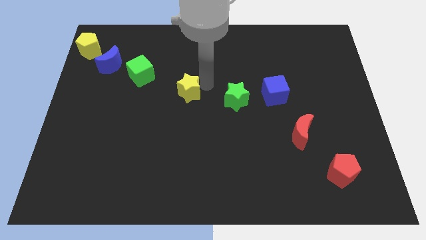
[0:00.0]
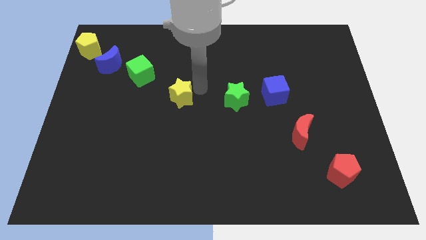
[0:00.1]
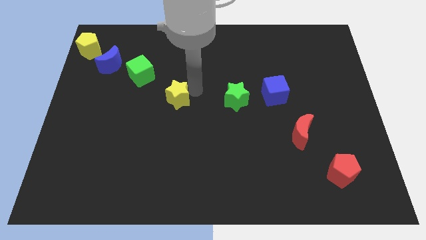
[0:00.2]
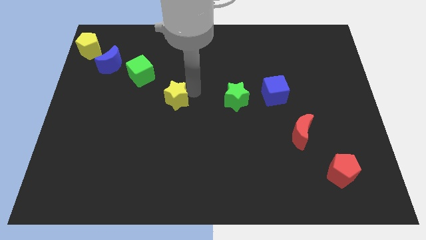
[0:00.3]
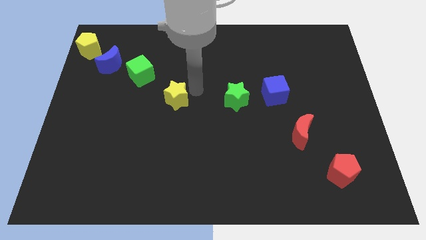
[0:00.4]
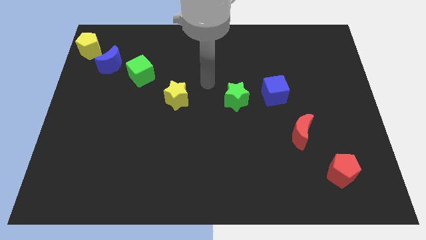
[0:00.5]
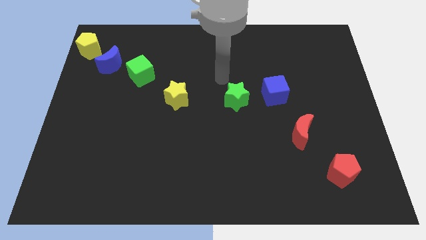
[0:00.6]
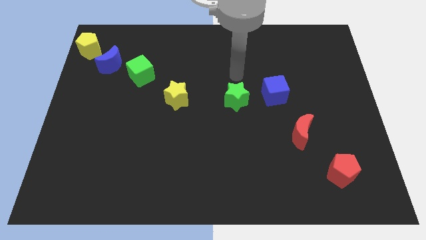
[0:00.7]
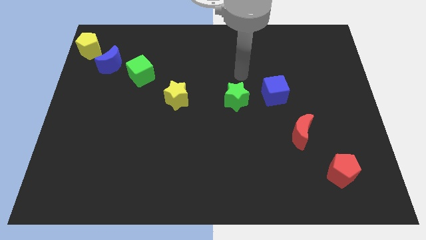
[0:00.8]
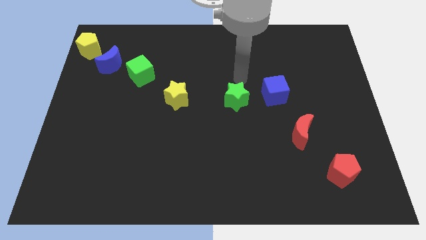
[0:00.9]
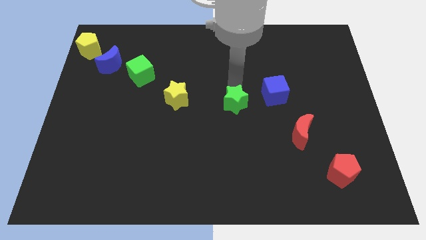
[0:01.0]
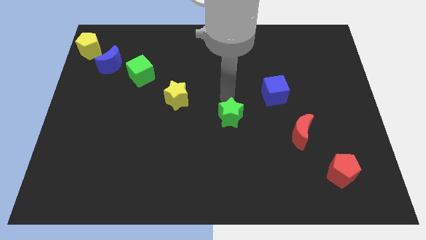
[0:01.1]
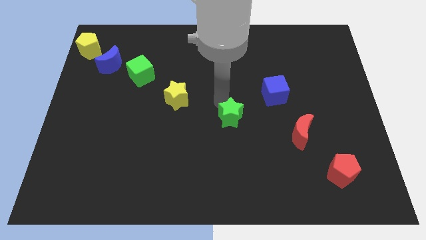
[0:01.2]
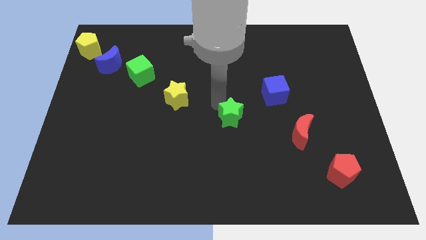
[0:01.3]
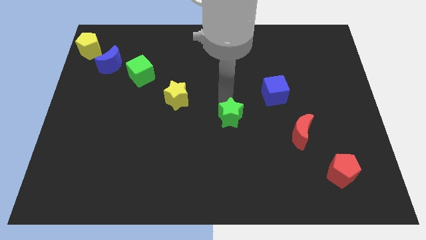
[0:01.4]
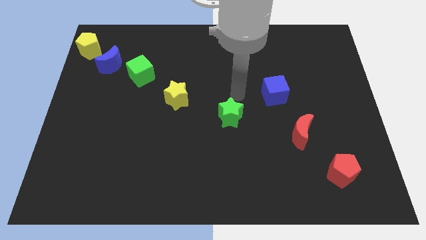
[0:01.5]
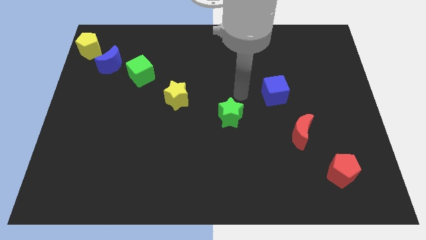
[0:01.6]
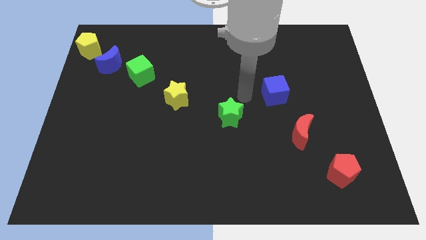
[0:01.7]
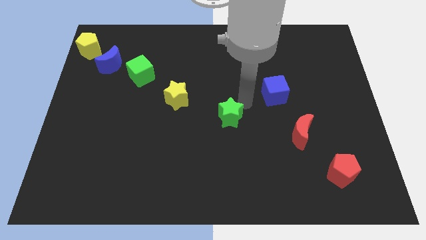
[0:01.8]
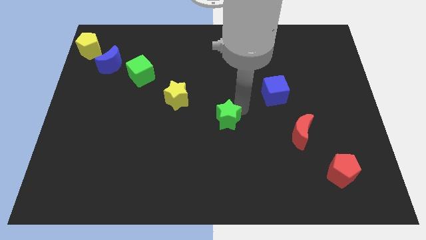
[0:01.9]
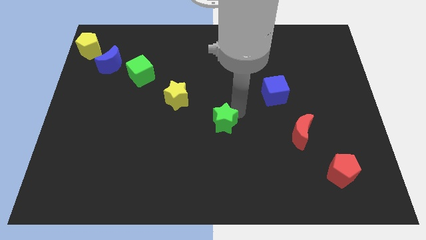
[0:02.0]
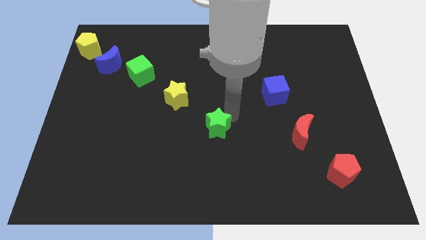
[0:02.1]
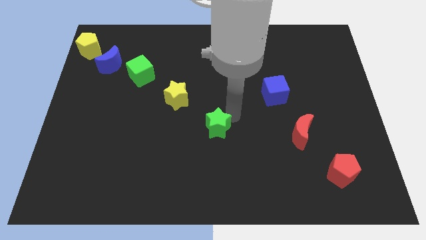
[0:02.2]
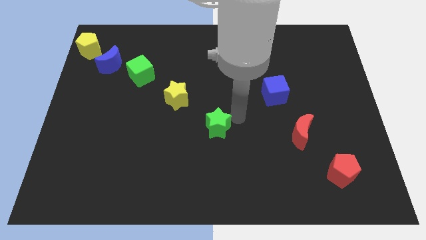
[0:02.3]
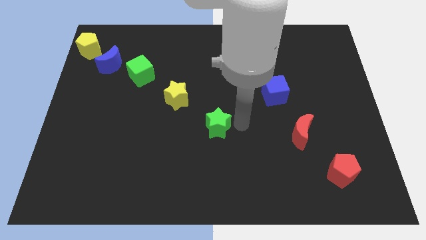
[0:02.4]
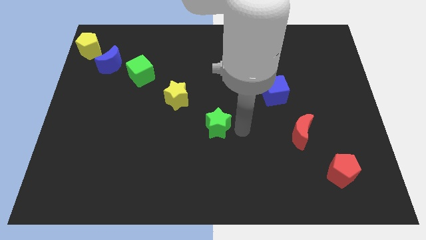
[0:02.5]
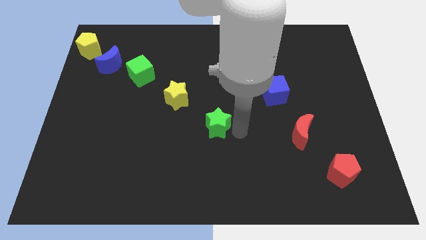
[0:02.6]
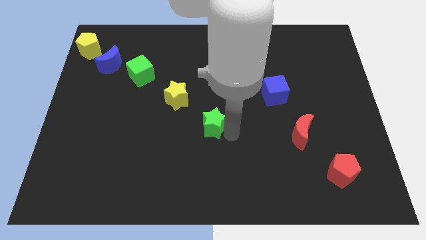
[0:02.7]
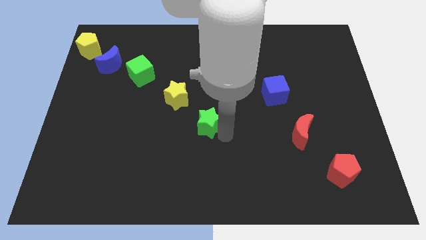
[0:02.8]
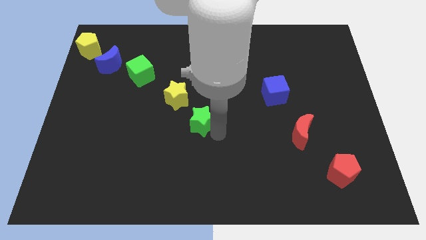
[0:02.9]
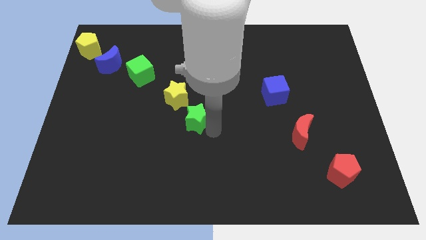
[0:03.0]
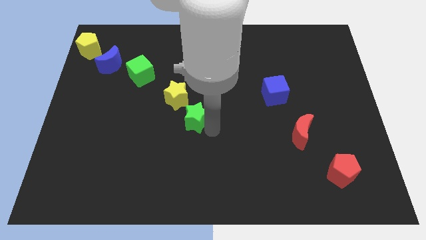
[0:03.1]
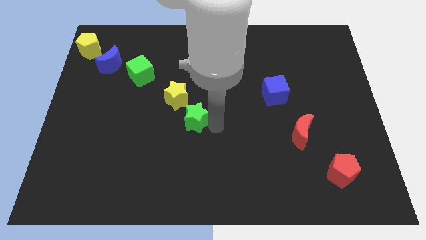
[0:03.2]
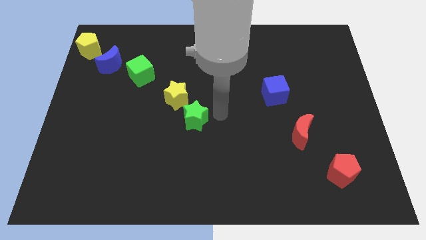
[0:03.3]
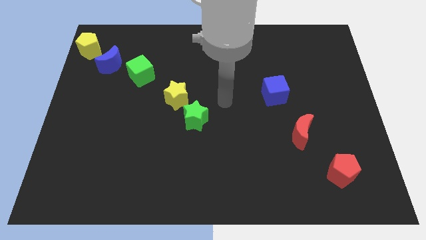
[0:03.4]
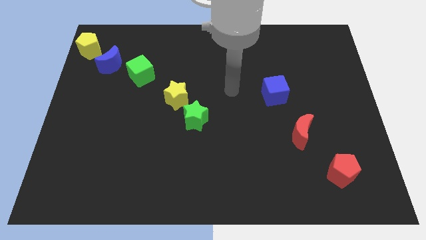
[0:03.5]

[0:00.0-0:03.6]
place the green star diagonal to the yellow star

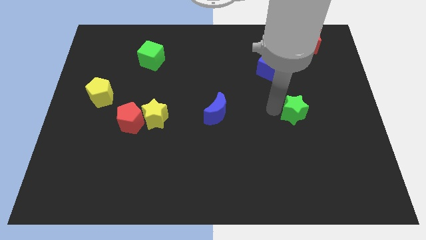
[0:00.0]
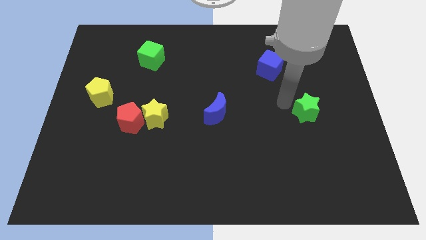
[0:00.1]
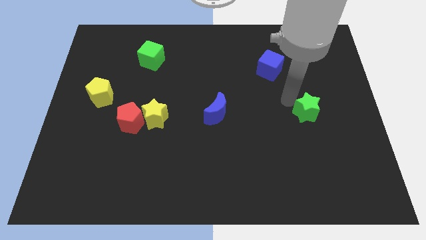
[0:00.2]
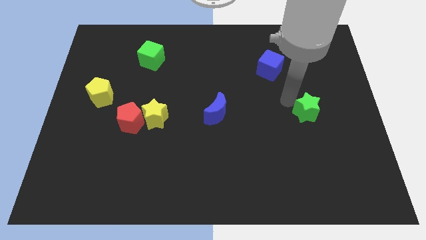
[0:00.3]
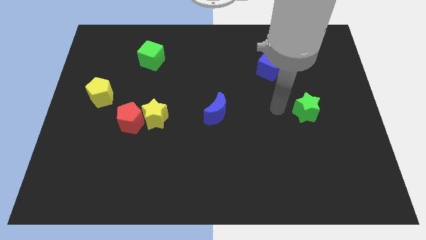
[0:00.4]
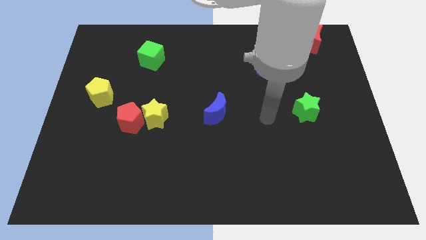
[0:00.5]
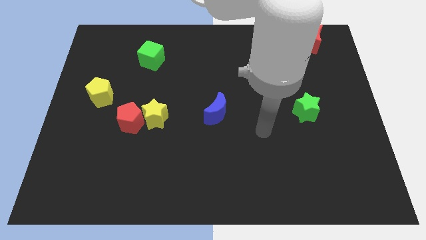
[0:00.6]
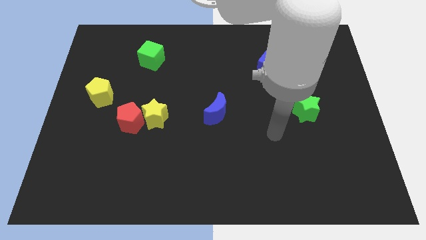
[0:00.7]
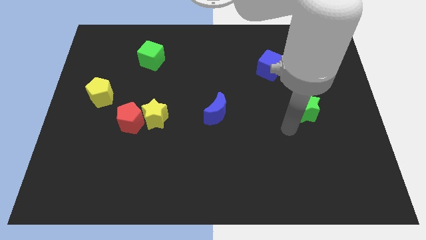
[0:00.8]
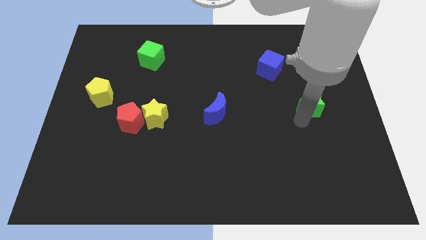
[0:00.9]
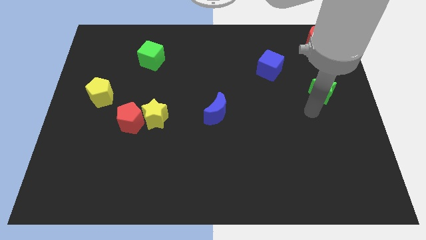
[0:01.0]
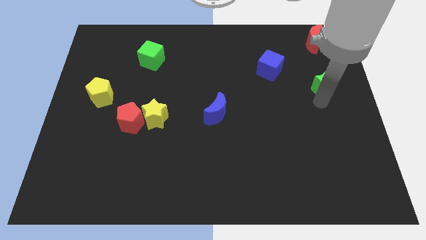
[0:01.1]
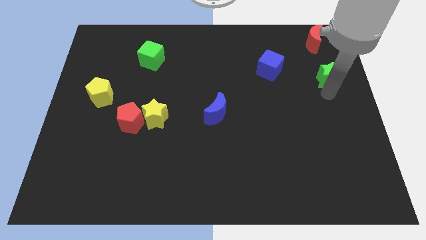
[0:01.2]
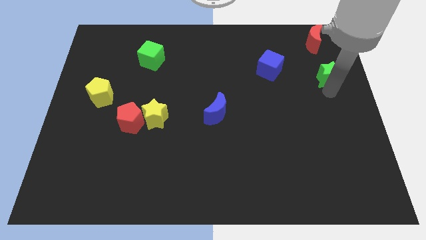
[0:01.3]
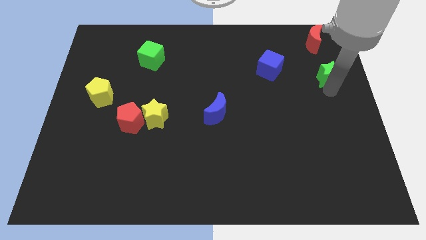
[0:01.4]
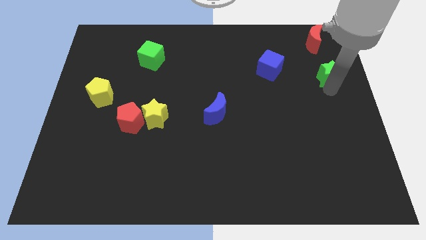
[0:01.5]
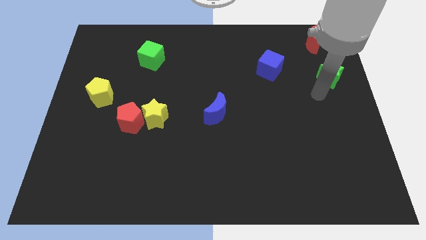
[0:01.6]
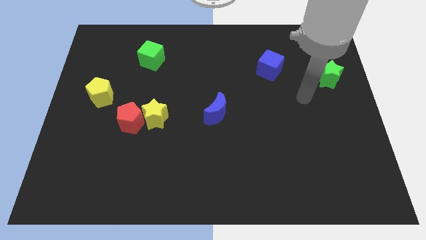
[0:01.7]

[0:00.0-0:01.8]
place the green star right to the blue cube

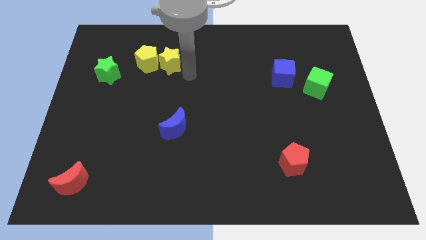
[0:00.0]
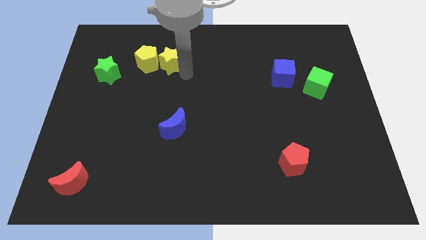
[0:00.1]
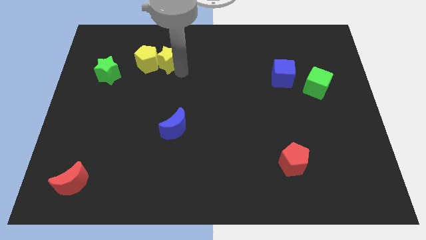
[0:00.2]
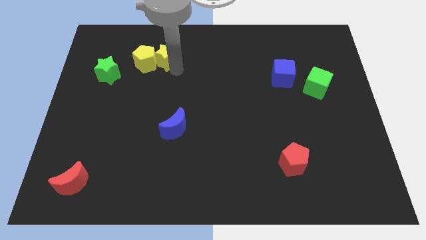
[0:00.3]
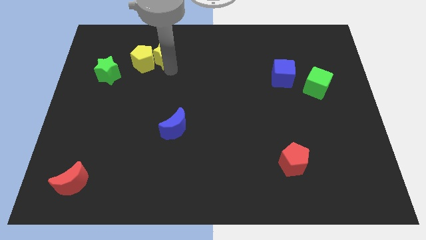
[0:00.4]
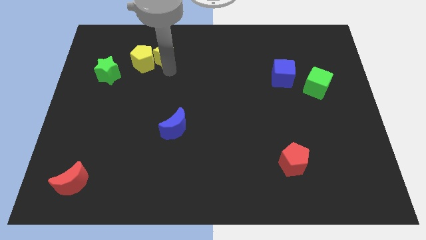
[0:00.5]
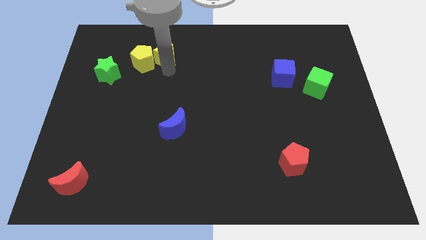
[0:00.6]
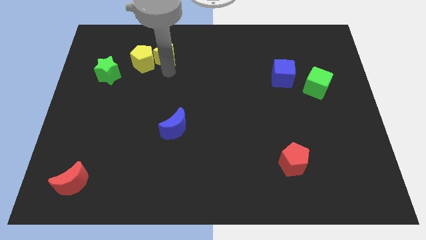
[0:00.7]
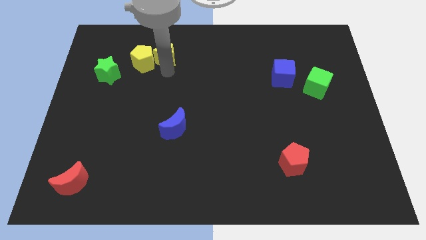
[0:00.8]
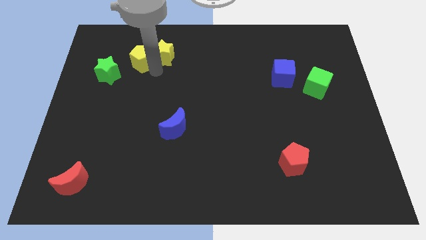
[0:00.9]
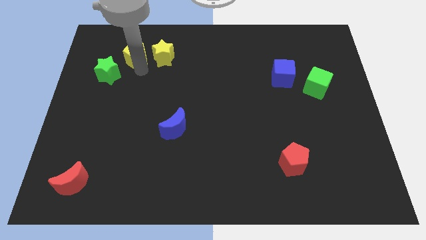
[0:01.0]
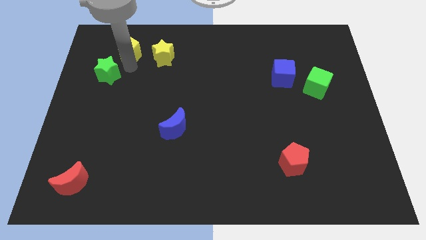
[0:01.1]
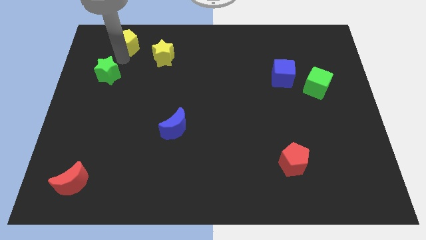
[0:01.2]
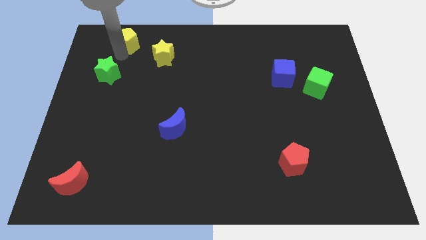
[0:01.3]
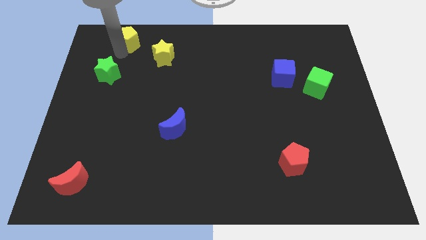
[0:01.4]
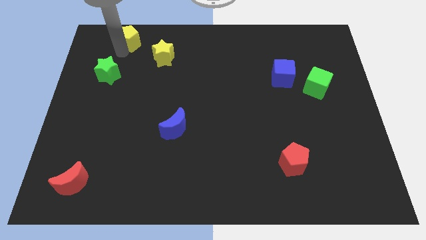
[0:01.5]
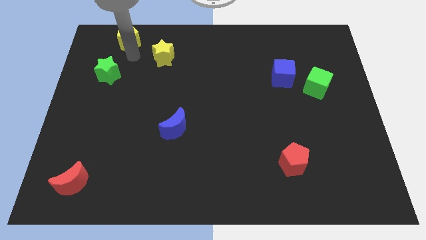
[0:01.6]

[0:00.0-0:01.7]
push the yellow pentagon to the top left of the board

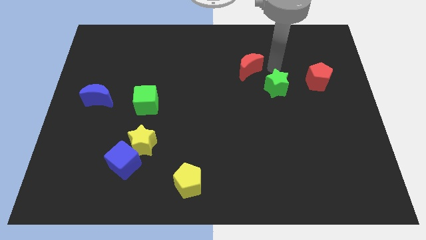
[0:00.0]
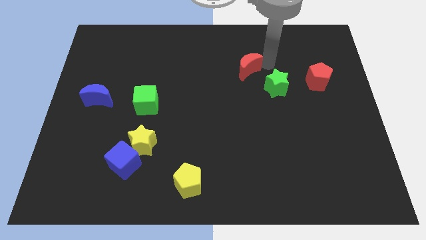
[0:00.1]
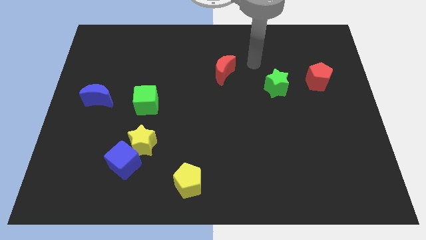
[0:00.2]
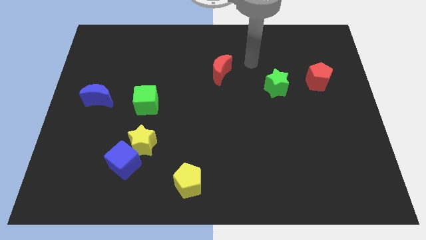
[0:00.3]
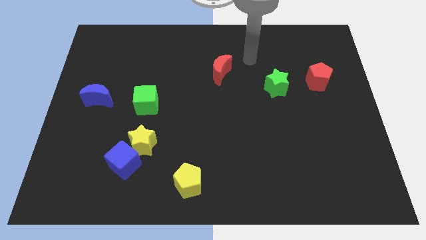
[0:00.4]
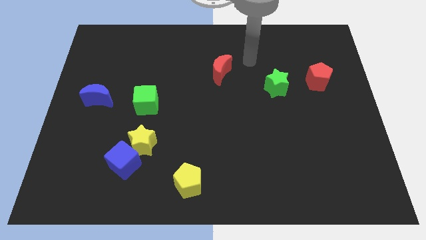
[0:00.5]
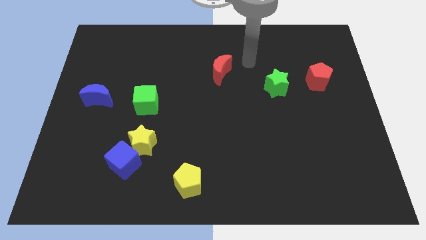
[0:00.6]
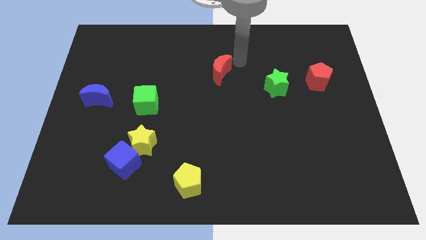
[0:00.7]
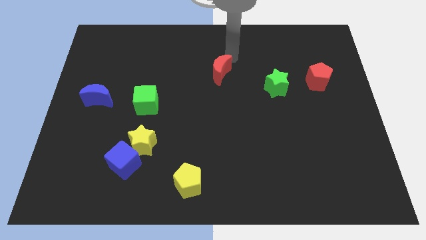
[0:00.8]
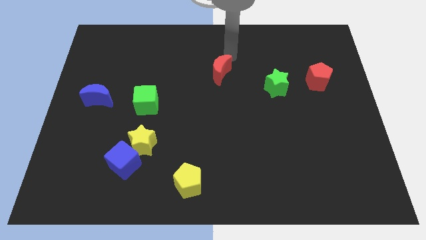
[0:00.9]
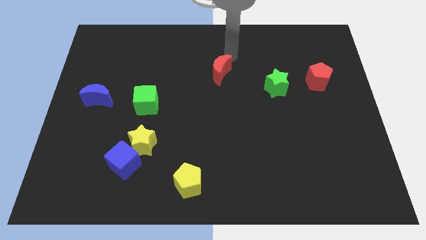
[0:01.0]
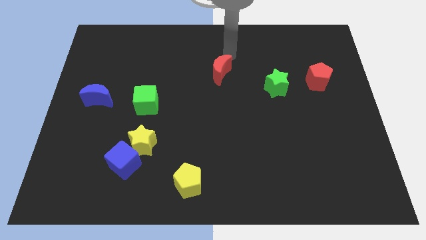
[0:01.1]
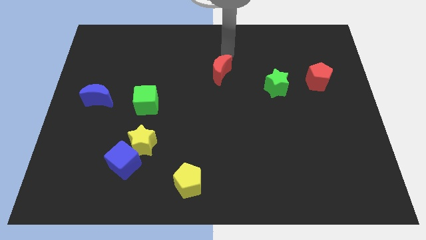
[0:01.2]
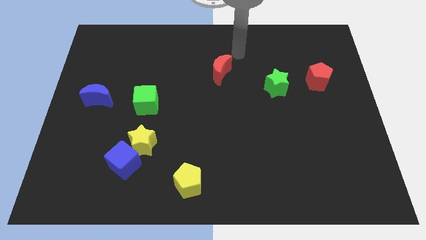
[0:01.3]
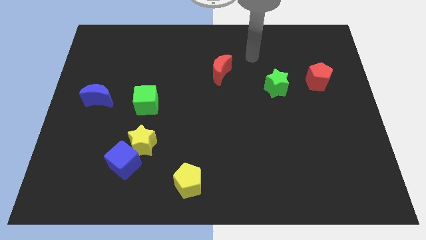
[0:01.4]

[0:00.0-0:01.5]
move the red crescent slightly to the left

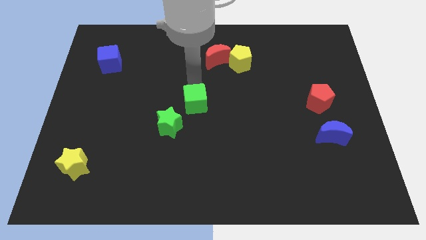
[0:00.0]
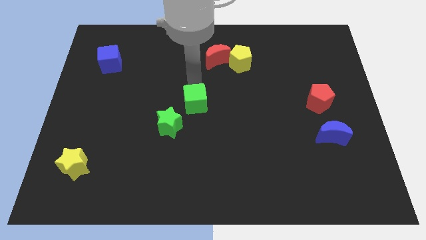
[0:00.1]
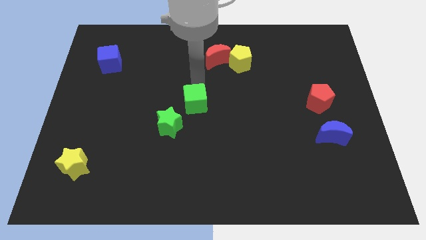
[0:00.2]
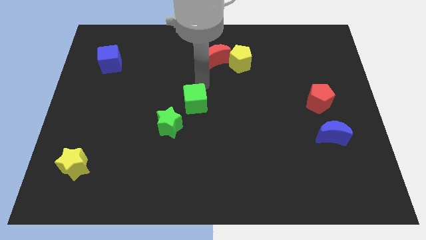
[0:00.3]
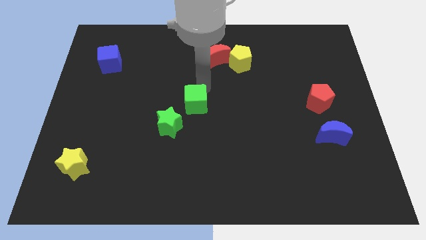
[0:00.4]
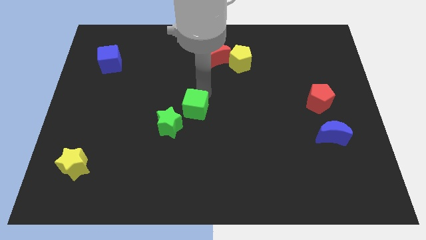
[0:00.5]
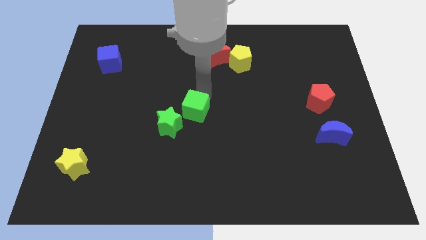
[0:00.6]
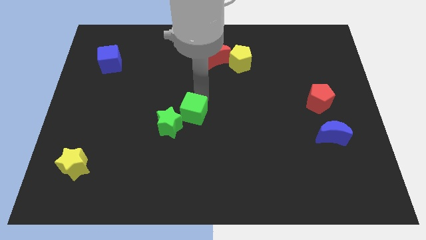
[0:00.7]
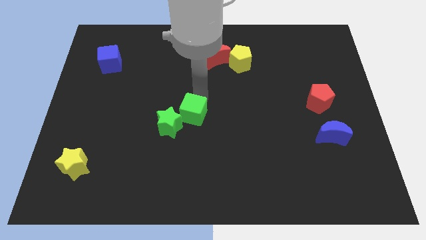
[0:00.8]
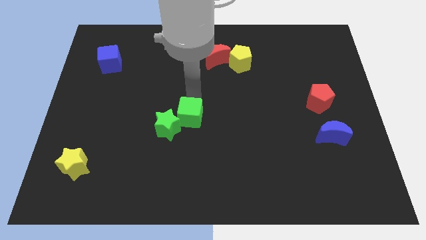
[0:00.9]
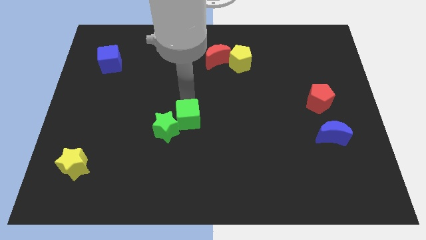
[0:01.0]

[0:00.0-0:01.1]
add green cube into green star
